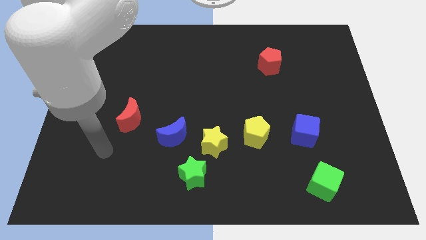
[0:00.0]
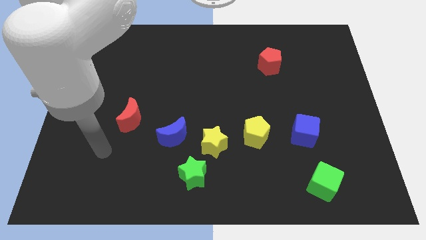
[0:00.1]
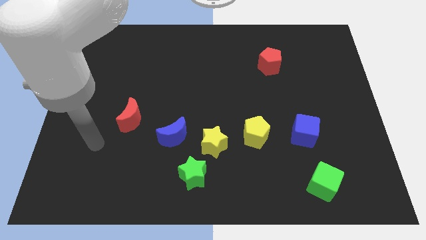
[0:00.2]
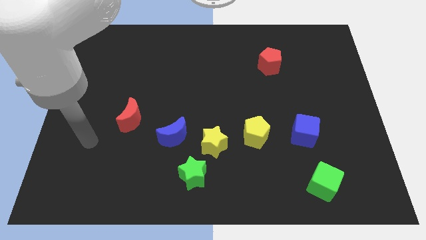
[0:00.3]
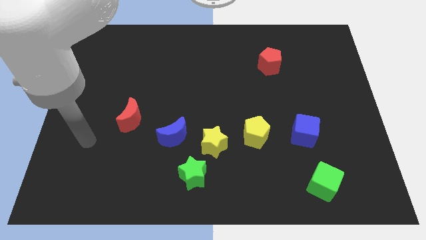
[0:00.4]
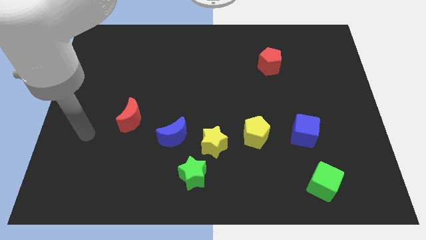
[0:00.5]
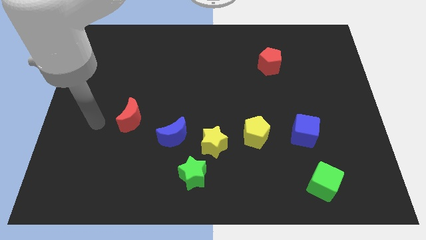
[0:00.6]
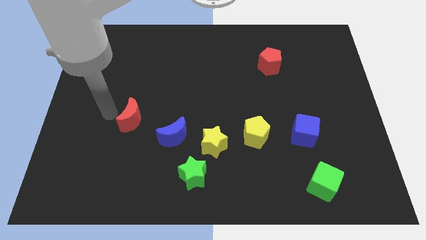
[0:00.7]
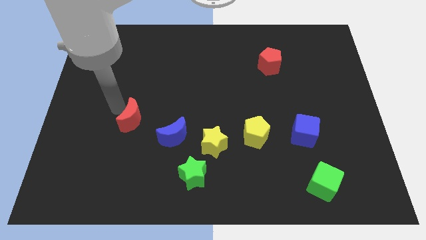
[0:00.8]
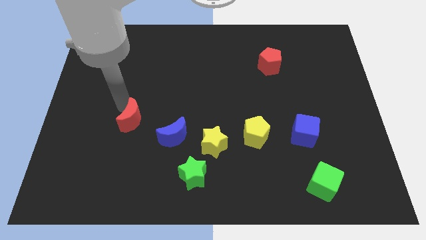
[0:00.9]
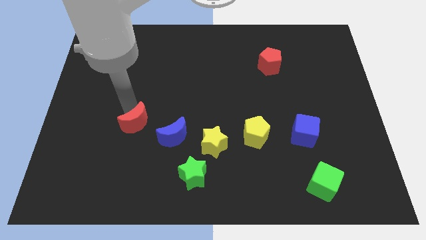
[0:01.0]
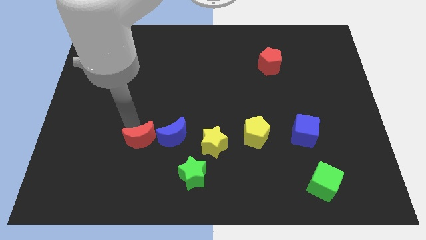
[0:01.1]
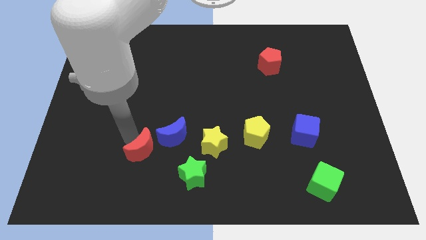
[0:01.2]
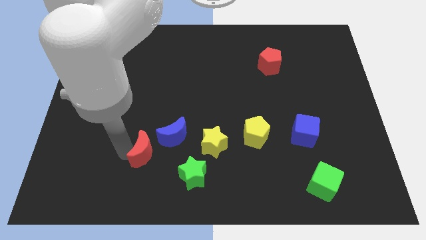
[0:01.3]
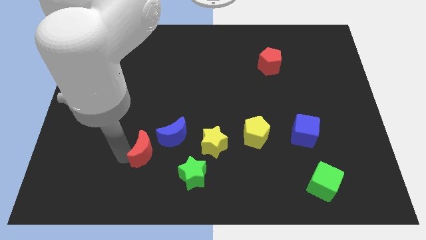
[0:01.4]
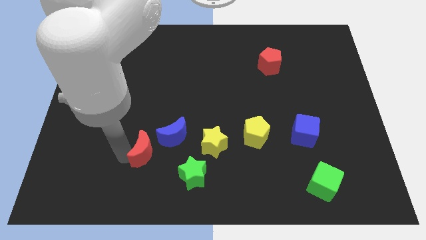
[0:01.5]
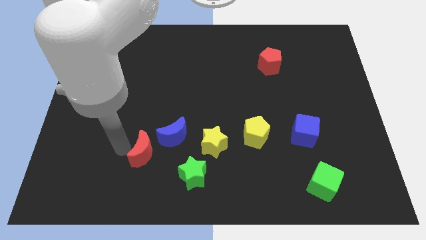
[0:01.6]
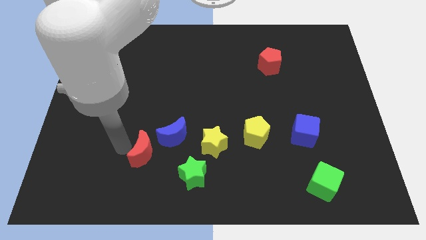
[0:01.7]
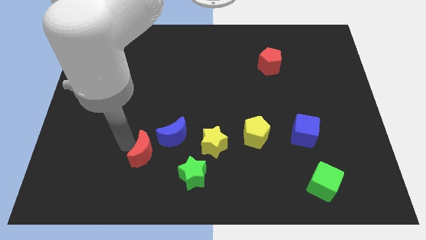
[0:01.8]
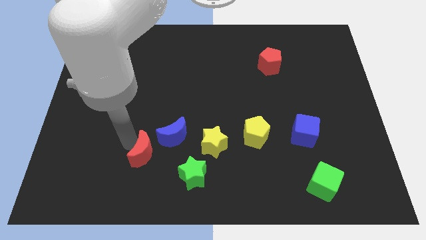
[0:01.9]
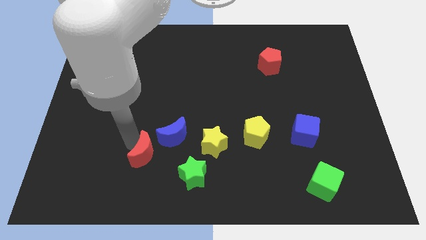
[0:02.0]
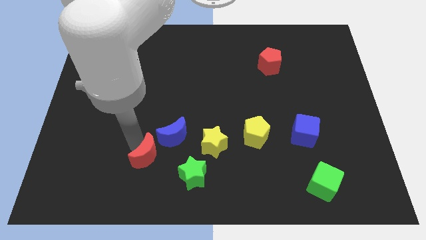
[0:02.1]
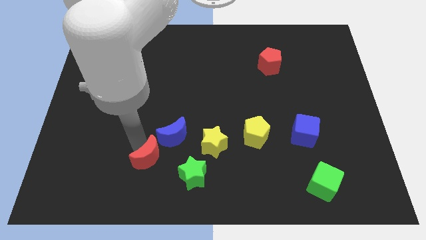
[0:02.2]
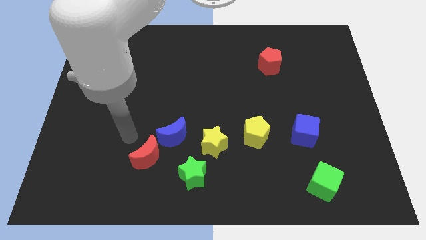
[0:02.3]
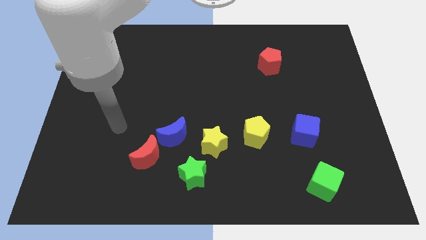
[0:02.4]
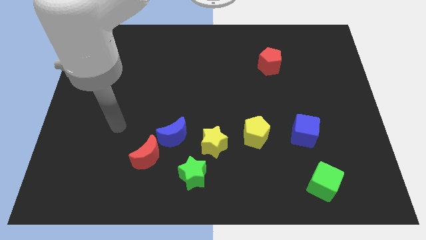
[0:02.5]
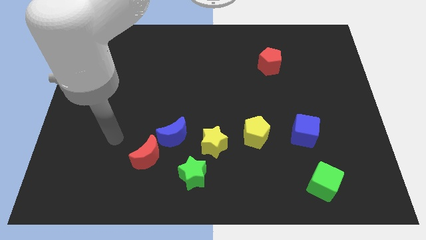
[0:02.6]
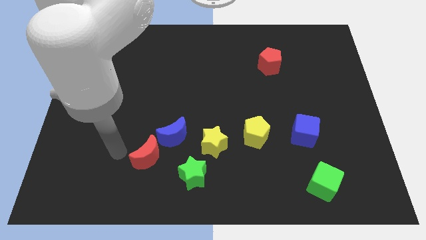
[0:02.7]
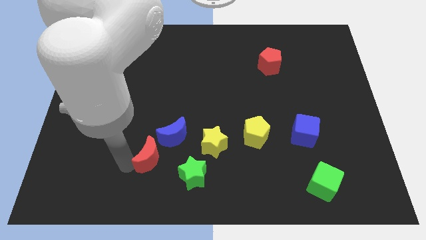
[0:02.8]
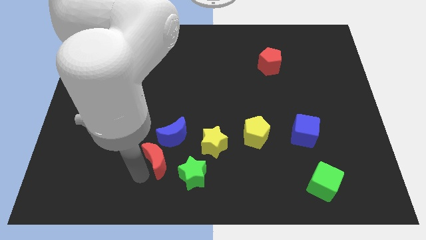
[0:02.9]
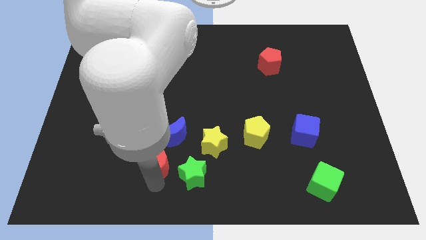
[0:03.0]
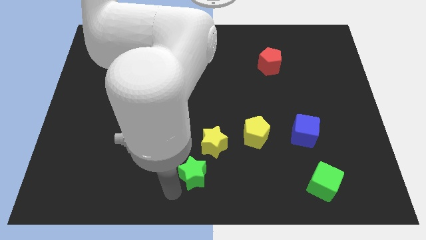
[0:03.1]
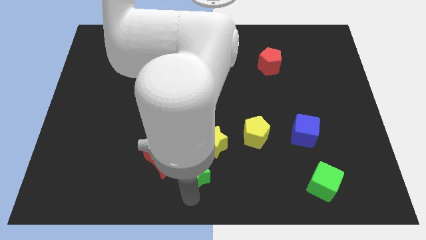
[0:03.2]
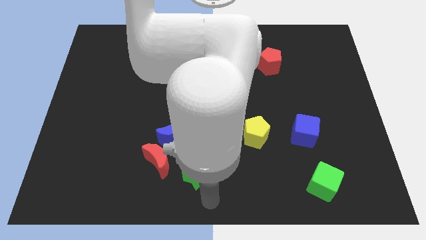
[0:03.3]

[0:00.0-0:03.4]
push the red moon to the bottom left side of the blue moon

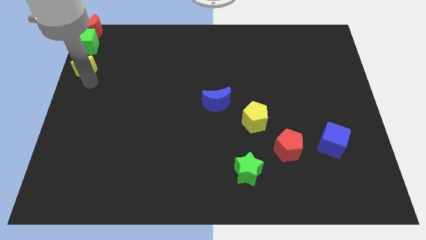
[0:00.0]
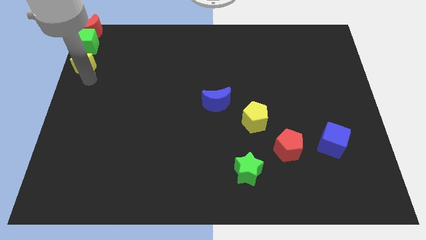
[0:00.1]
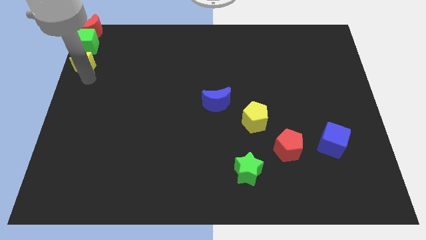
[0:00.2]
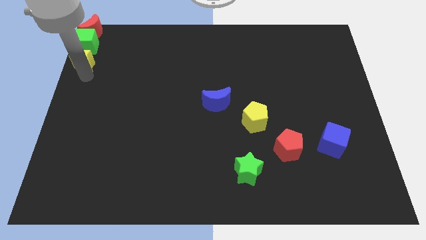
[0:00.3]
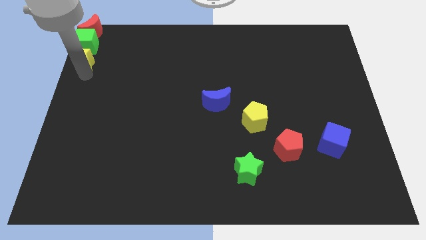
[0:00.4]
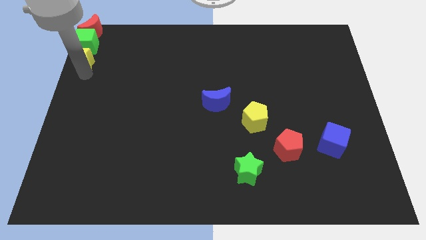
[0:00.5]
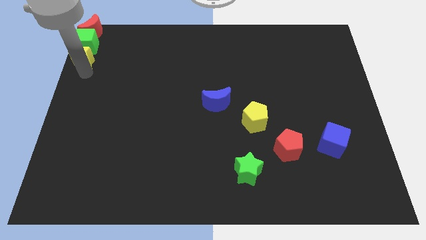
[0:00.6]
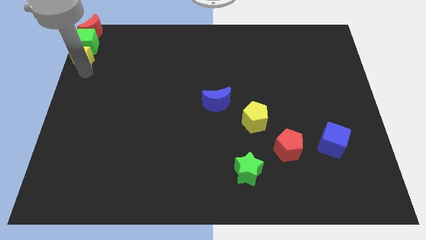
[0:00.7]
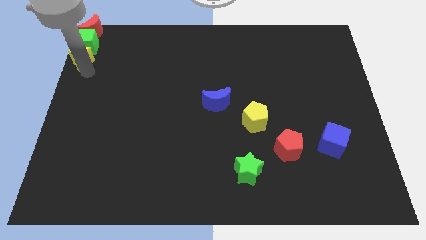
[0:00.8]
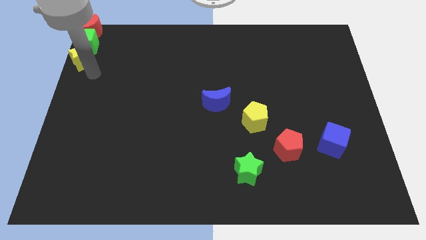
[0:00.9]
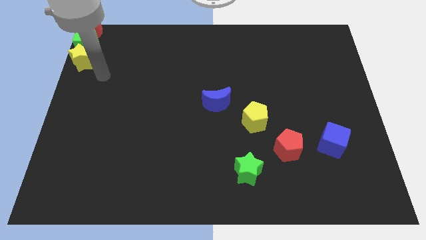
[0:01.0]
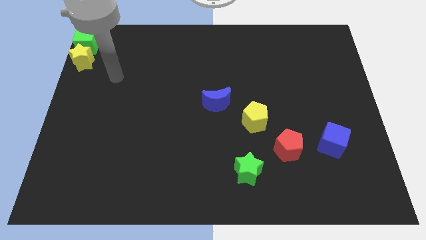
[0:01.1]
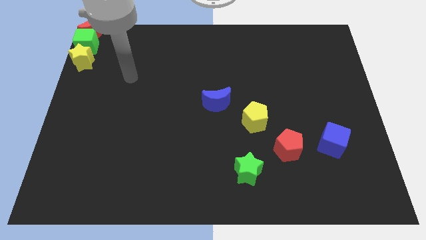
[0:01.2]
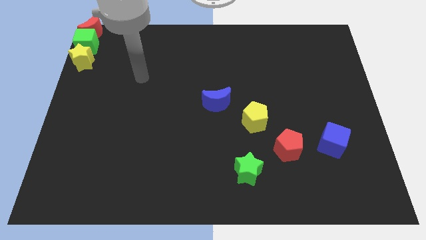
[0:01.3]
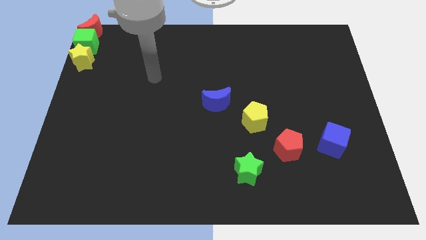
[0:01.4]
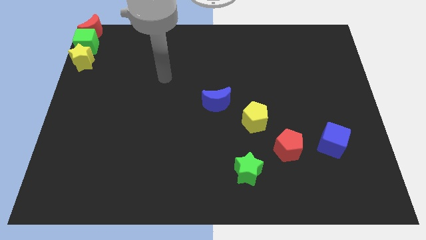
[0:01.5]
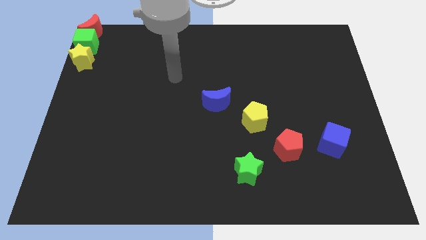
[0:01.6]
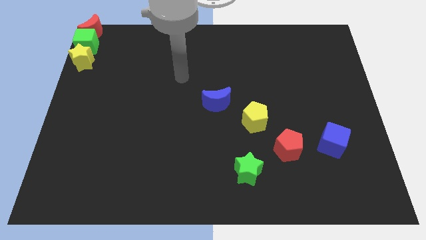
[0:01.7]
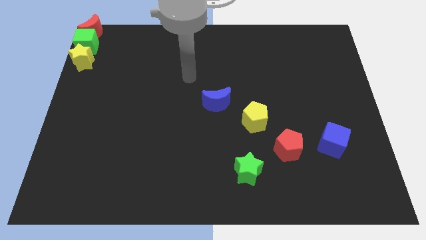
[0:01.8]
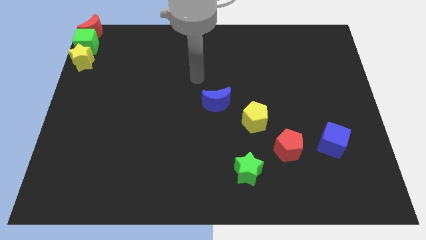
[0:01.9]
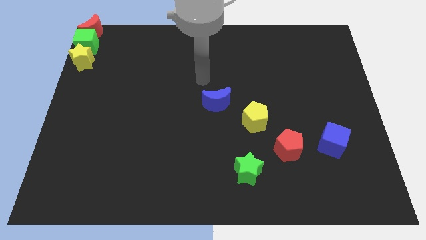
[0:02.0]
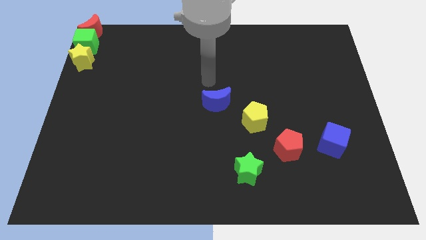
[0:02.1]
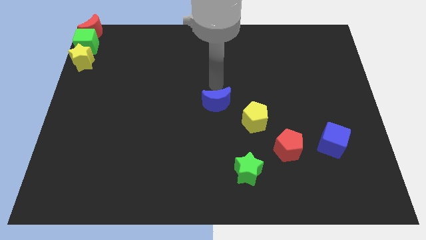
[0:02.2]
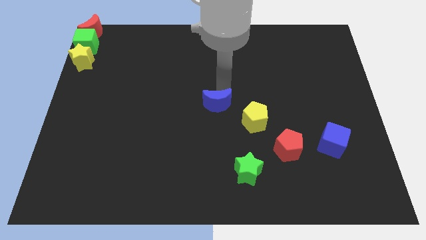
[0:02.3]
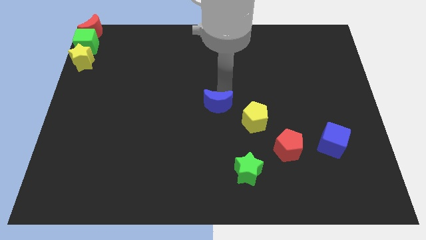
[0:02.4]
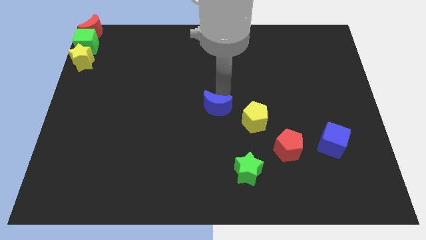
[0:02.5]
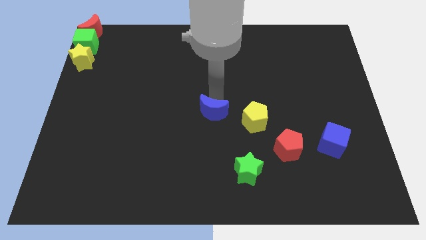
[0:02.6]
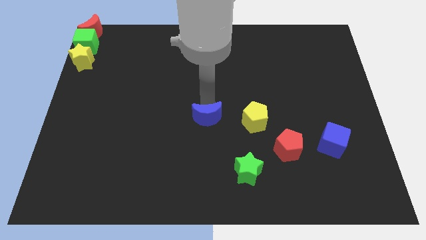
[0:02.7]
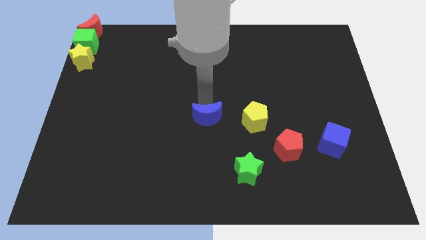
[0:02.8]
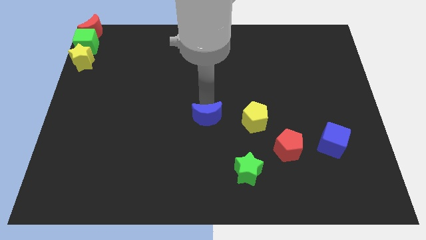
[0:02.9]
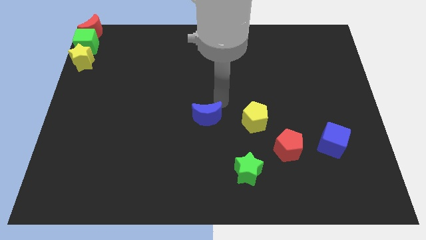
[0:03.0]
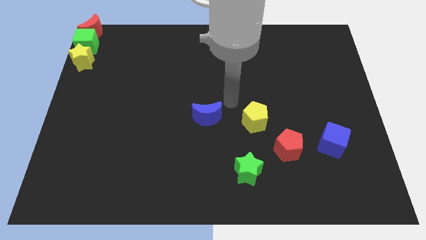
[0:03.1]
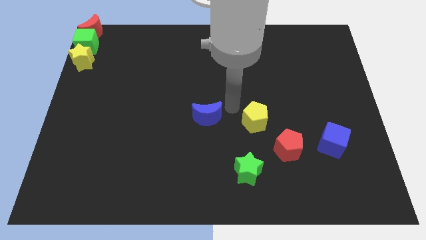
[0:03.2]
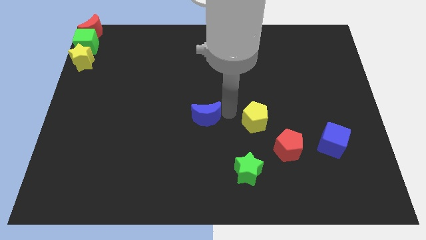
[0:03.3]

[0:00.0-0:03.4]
move the blue moon left to the yellow pentagon

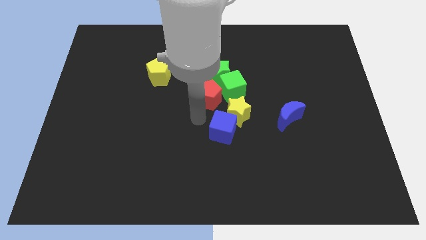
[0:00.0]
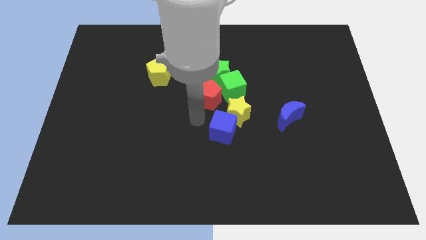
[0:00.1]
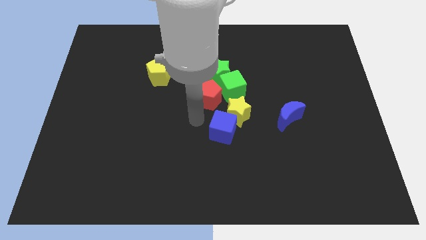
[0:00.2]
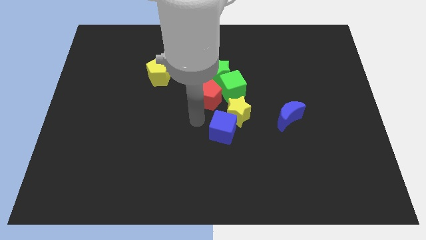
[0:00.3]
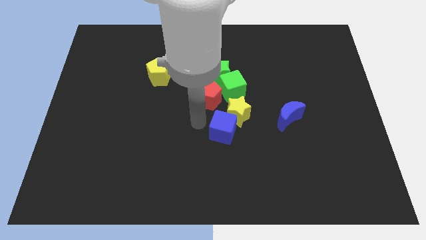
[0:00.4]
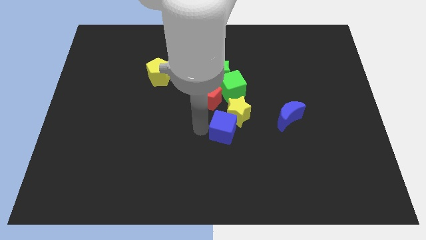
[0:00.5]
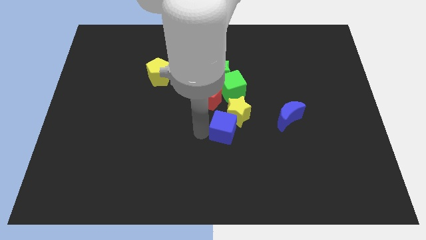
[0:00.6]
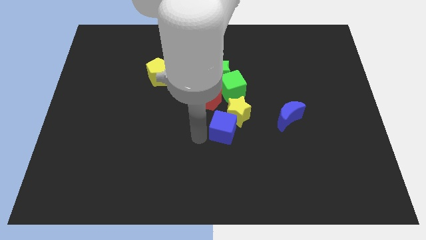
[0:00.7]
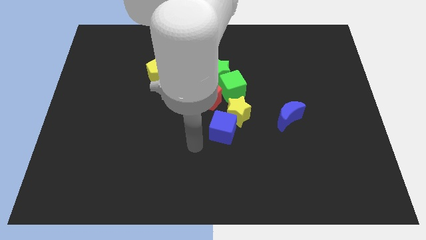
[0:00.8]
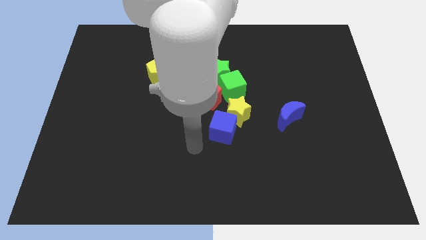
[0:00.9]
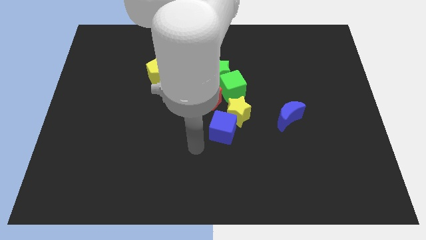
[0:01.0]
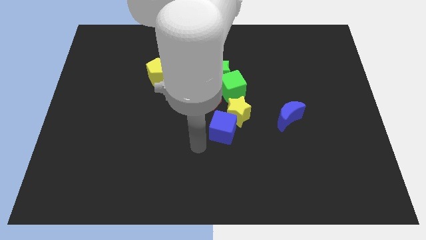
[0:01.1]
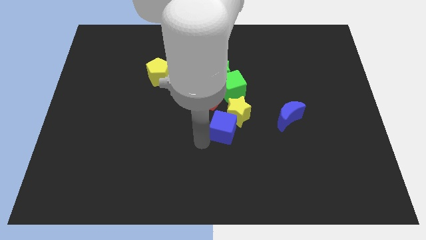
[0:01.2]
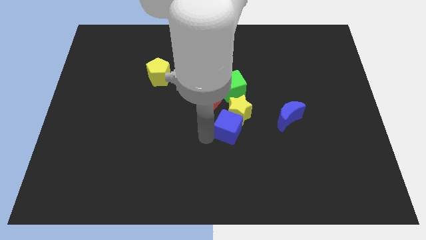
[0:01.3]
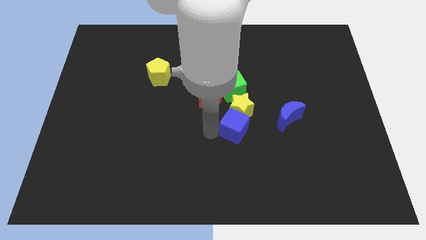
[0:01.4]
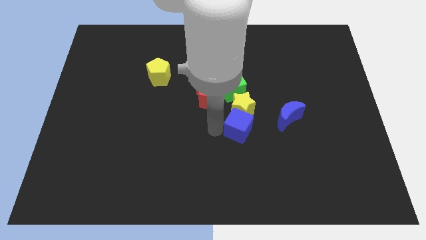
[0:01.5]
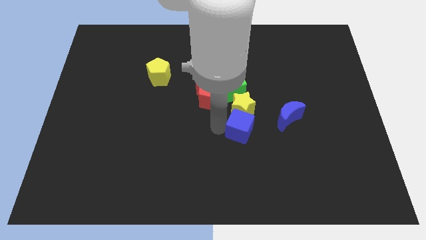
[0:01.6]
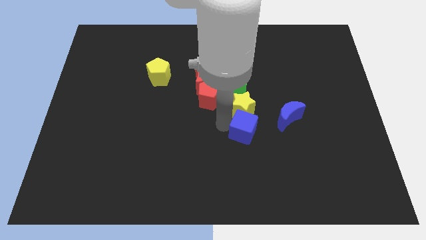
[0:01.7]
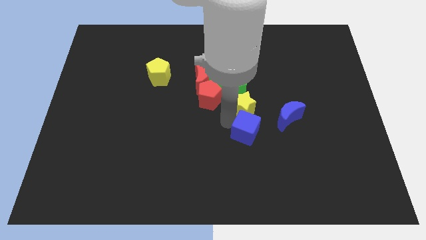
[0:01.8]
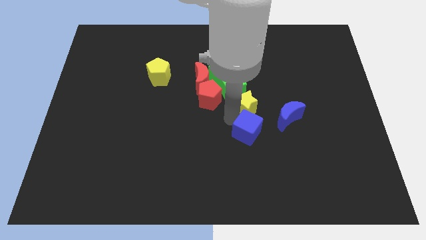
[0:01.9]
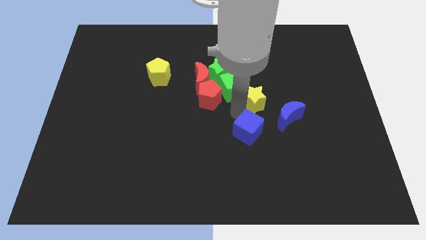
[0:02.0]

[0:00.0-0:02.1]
push the blue cube slightly to the right

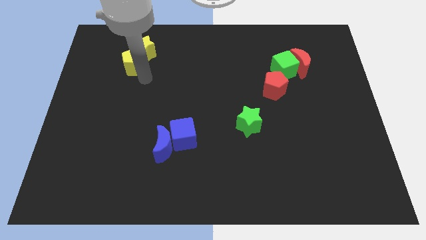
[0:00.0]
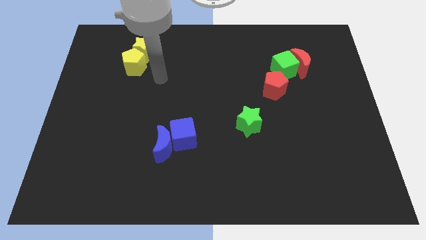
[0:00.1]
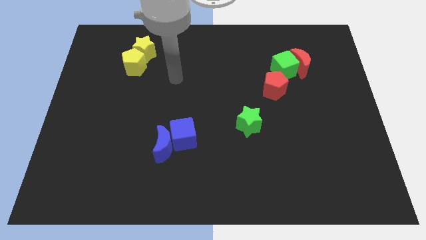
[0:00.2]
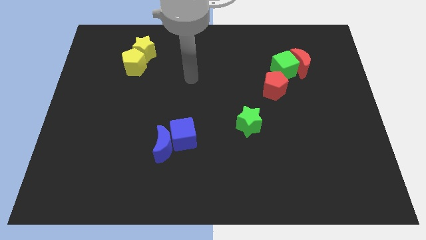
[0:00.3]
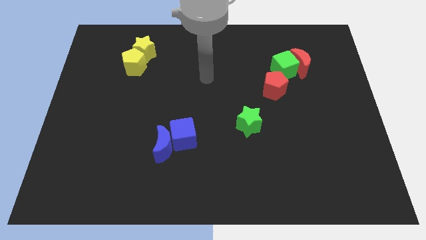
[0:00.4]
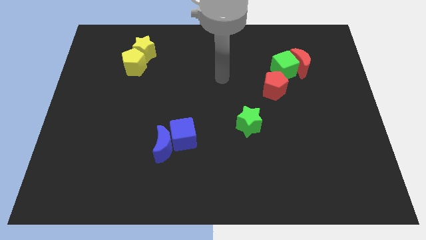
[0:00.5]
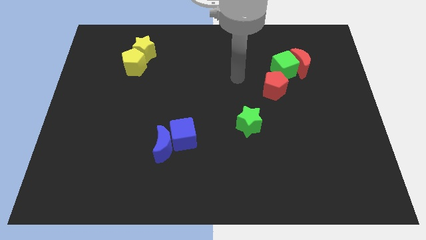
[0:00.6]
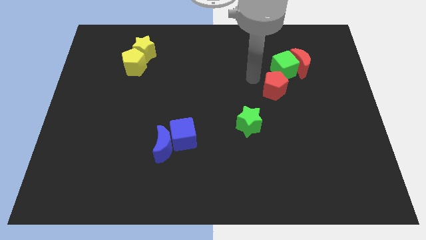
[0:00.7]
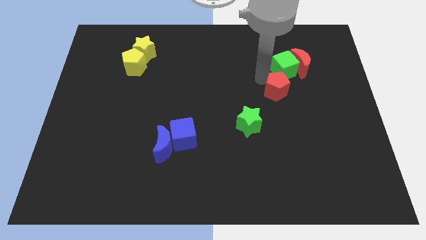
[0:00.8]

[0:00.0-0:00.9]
move your arm to the left of red pentagon
